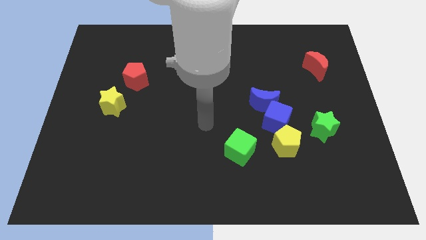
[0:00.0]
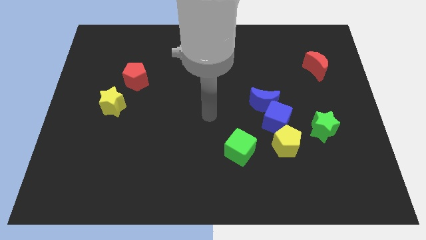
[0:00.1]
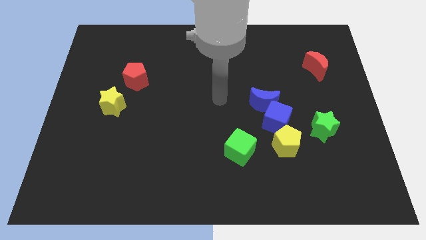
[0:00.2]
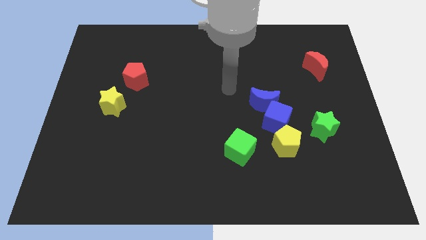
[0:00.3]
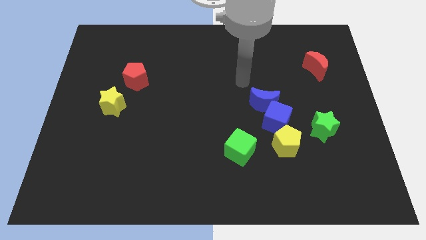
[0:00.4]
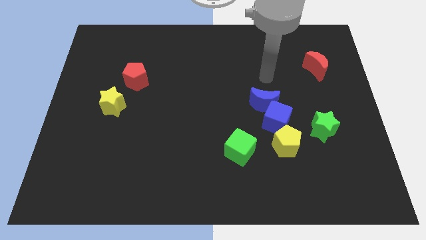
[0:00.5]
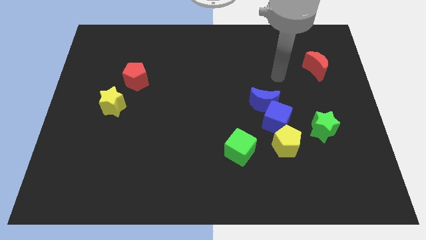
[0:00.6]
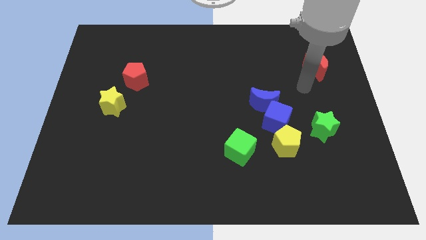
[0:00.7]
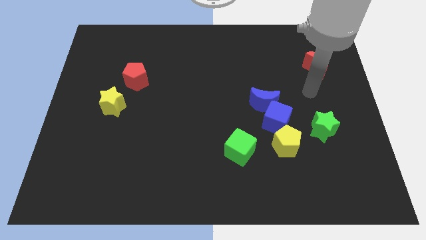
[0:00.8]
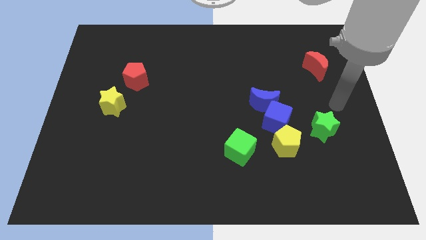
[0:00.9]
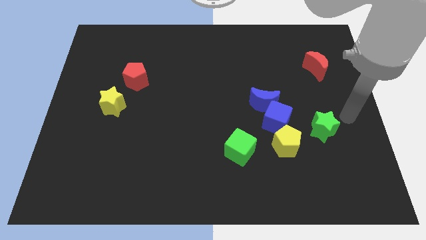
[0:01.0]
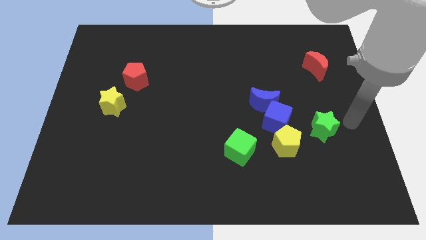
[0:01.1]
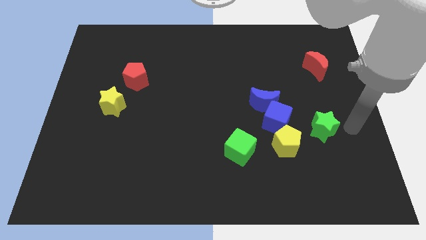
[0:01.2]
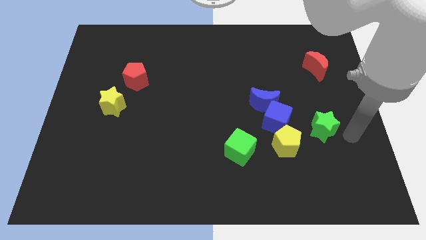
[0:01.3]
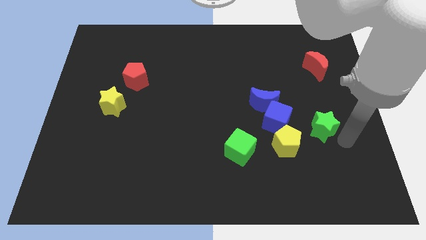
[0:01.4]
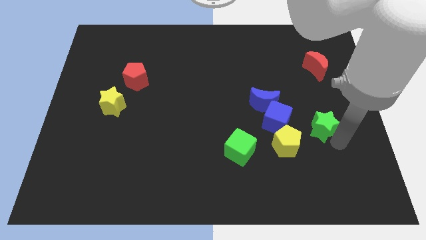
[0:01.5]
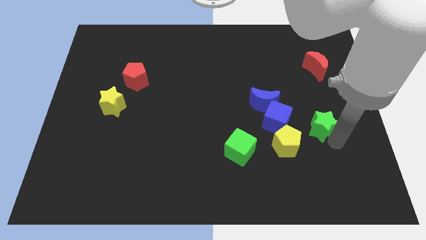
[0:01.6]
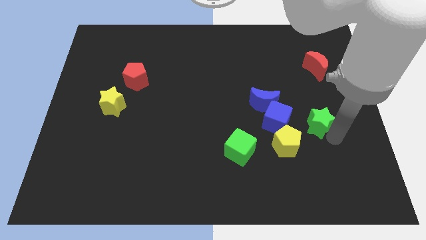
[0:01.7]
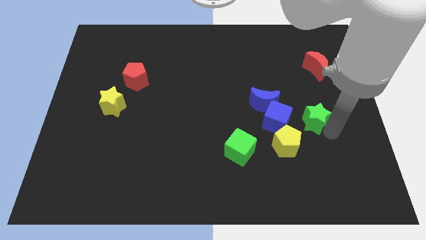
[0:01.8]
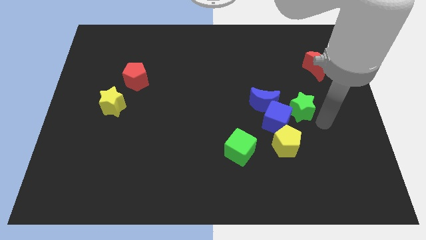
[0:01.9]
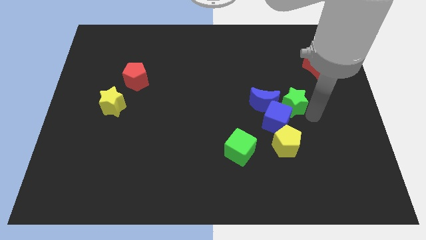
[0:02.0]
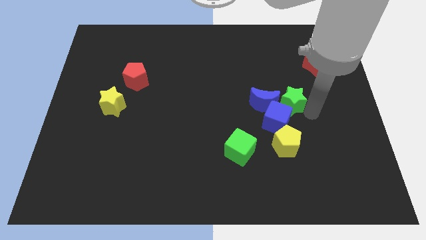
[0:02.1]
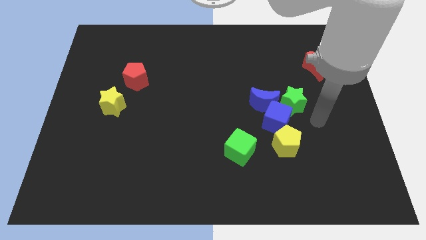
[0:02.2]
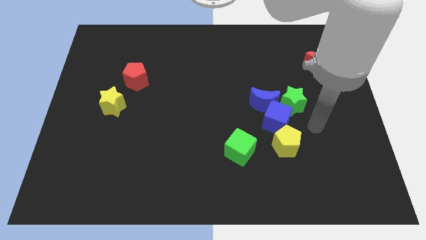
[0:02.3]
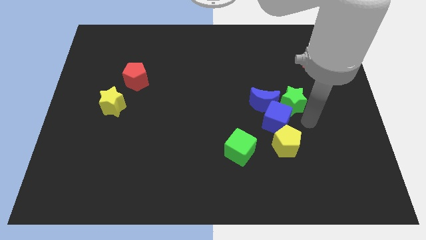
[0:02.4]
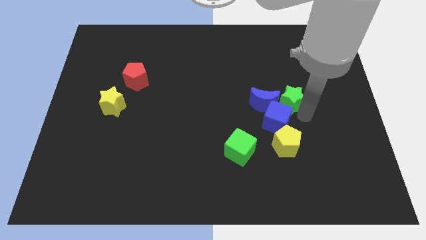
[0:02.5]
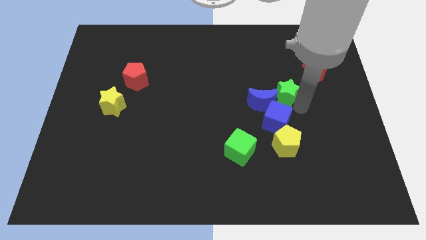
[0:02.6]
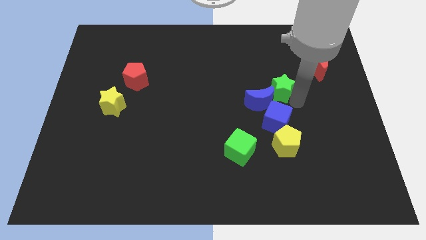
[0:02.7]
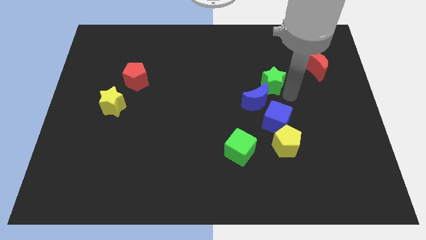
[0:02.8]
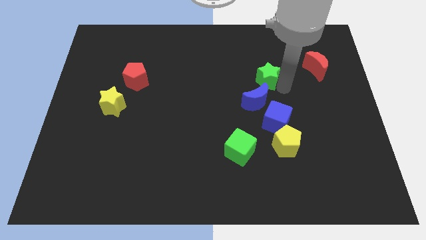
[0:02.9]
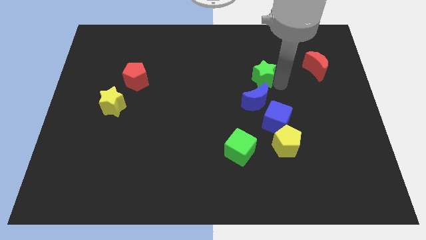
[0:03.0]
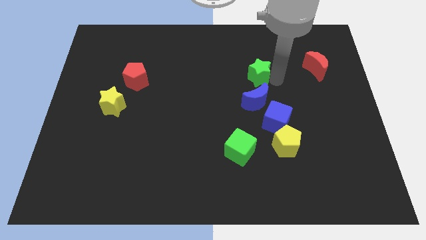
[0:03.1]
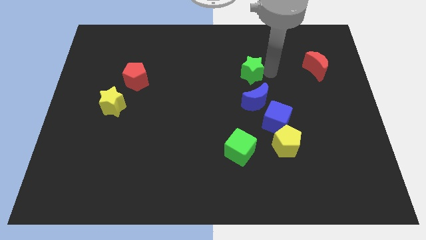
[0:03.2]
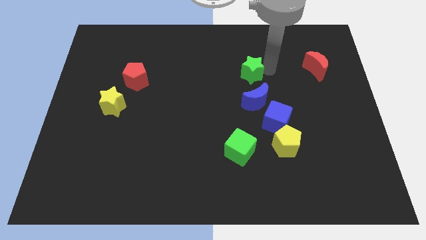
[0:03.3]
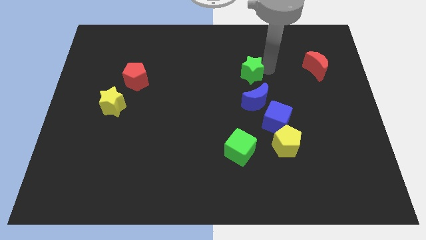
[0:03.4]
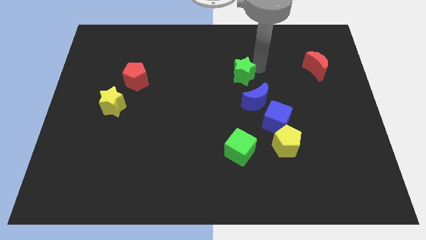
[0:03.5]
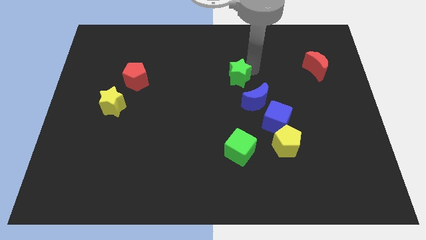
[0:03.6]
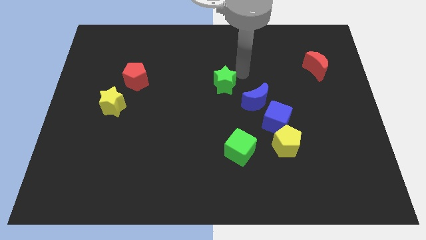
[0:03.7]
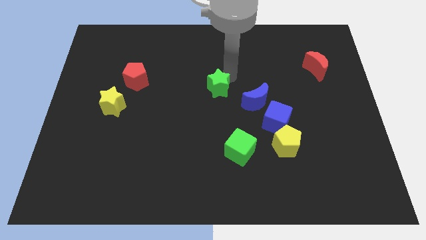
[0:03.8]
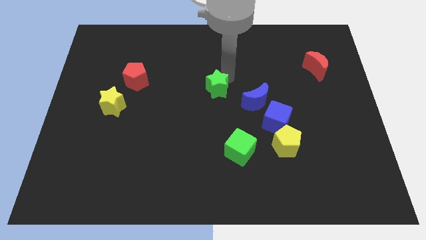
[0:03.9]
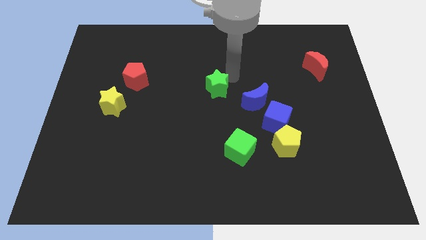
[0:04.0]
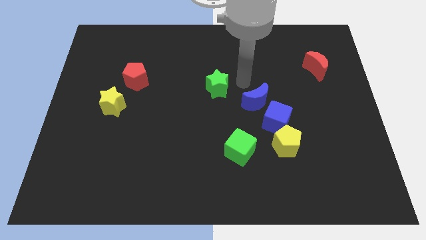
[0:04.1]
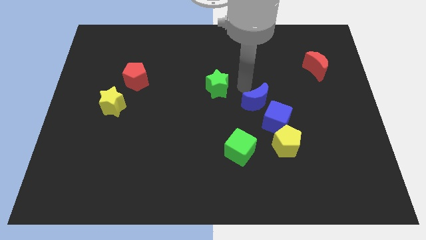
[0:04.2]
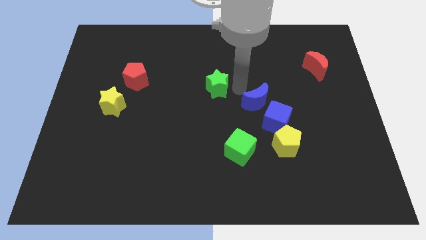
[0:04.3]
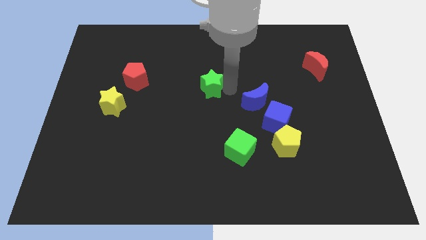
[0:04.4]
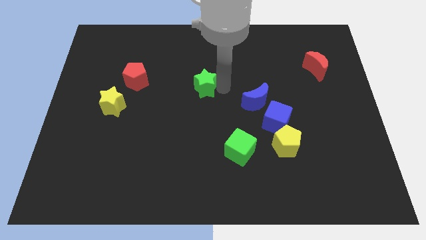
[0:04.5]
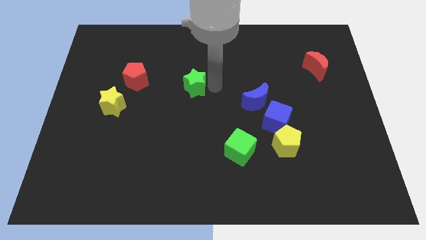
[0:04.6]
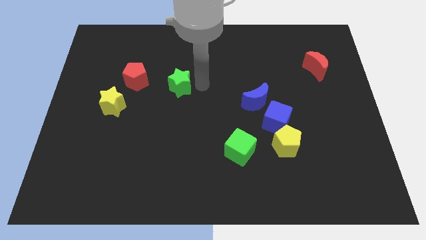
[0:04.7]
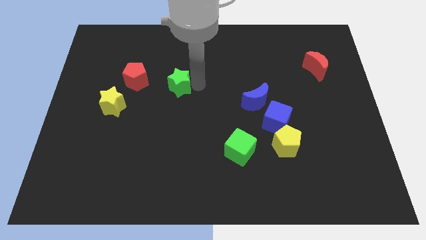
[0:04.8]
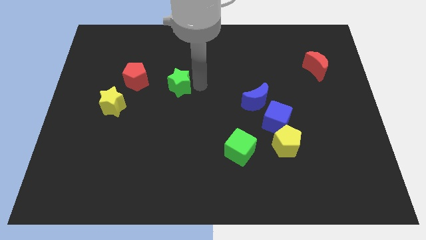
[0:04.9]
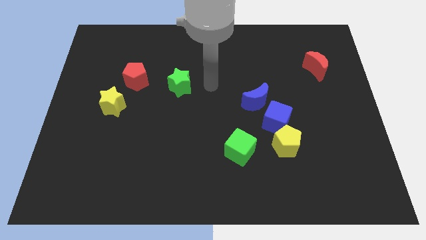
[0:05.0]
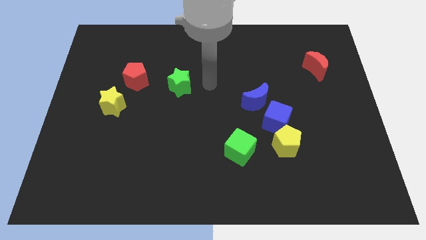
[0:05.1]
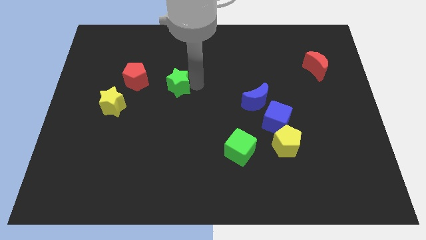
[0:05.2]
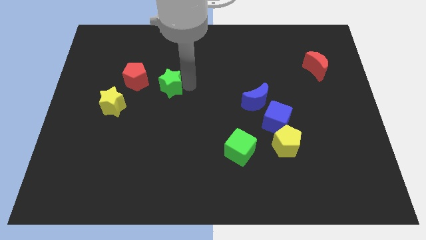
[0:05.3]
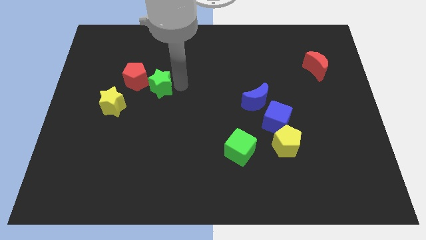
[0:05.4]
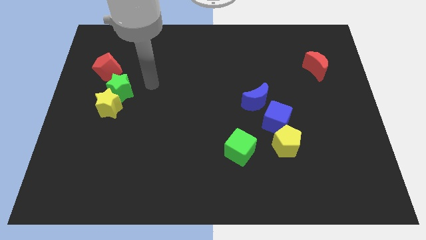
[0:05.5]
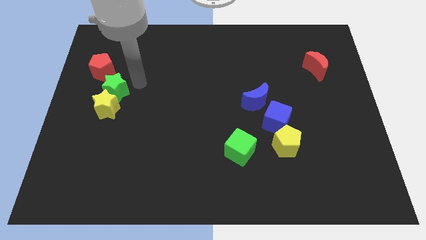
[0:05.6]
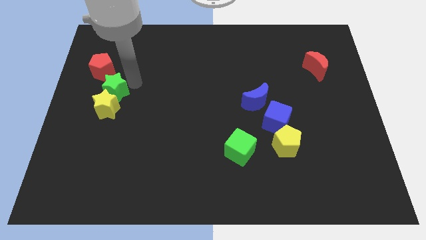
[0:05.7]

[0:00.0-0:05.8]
put the green star towards the yellow star

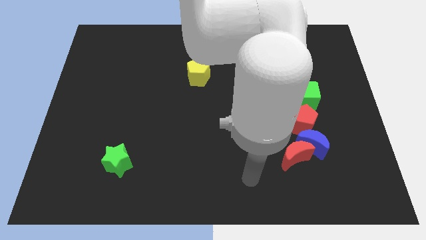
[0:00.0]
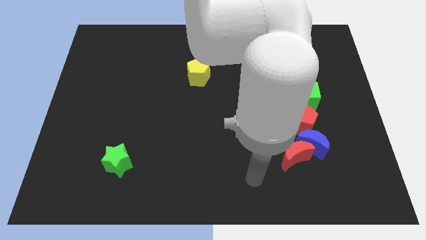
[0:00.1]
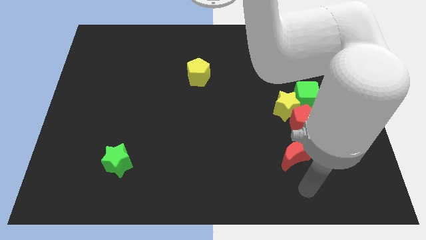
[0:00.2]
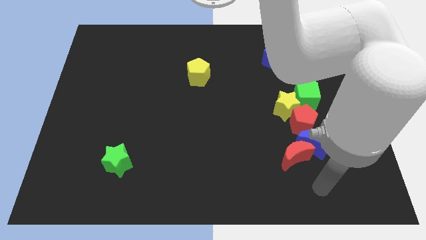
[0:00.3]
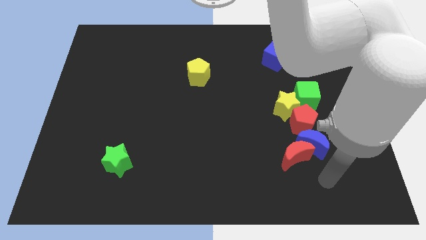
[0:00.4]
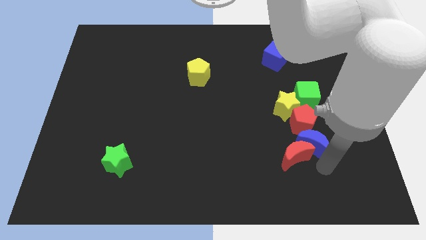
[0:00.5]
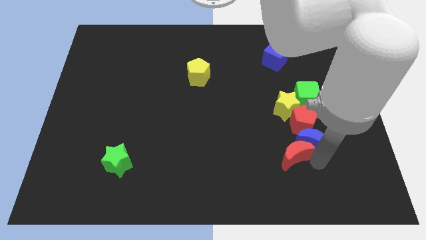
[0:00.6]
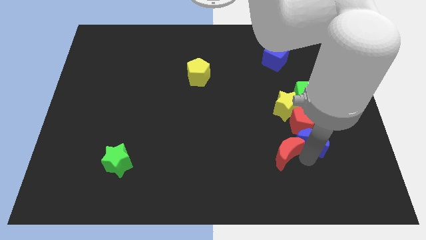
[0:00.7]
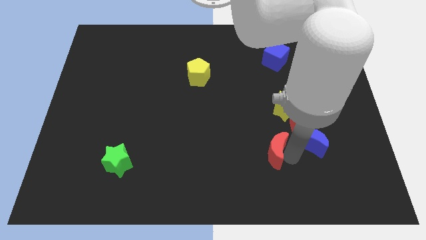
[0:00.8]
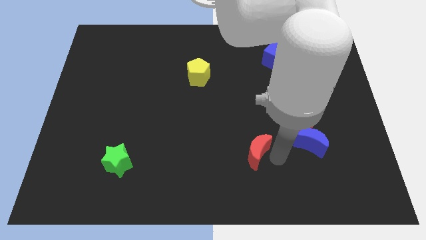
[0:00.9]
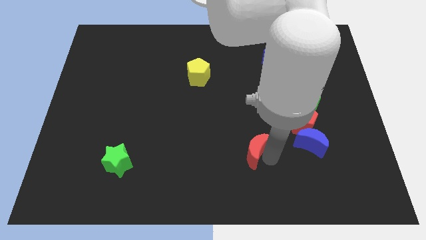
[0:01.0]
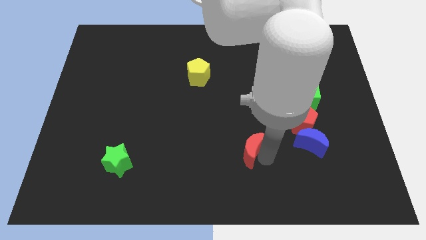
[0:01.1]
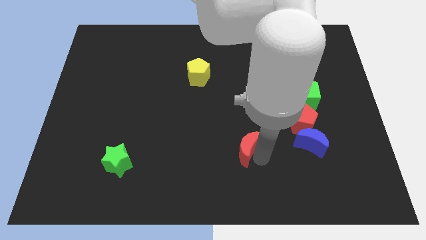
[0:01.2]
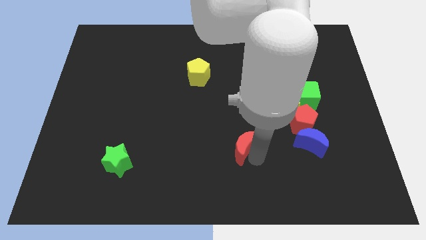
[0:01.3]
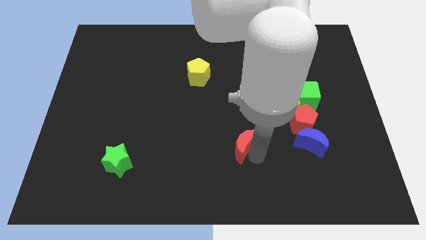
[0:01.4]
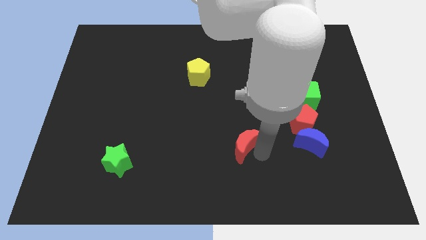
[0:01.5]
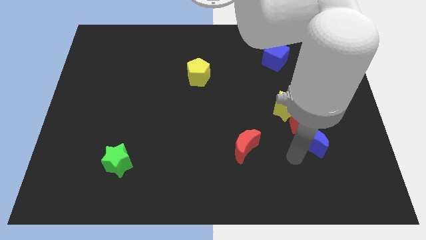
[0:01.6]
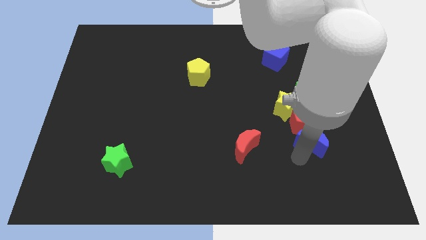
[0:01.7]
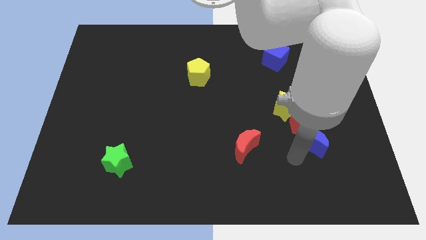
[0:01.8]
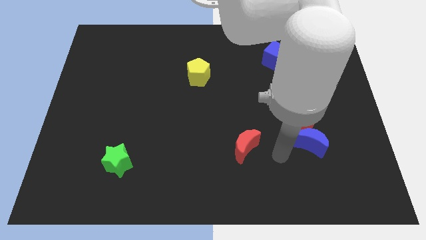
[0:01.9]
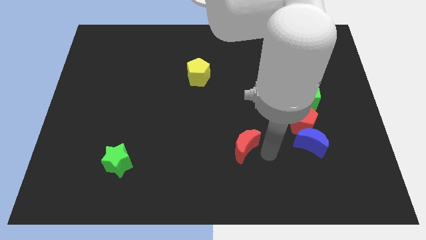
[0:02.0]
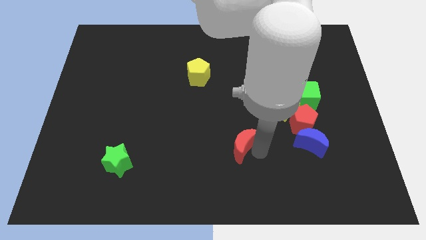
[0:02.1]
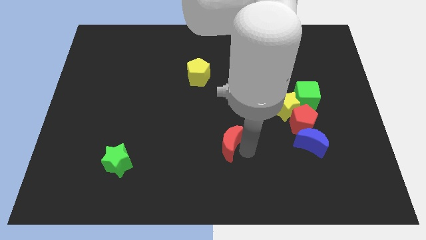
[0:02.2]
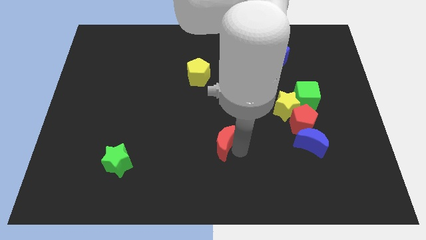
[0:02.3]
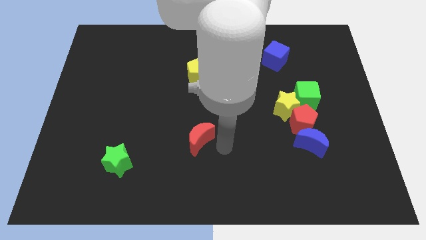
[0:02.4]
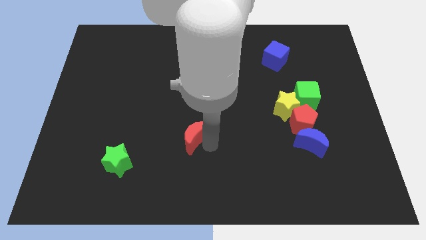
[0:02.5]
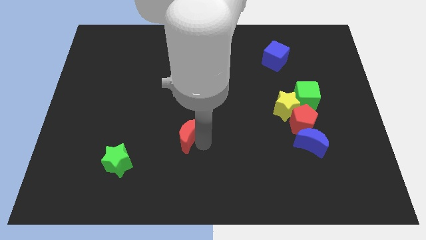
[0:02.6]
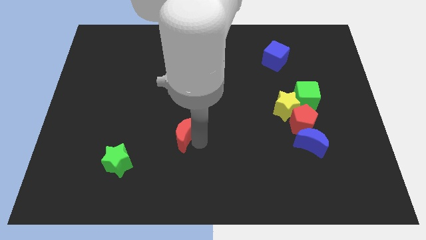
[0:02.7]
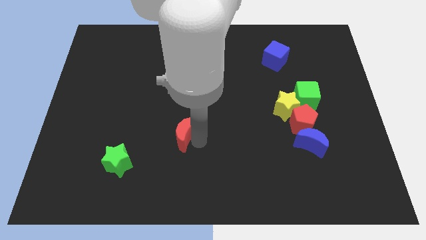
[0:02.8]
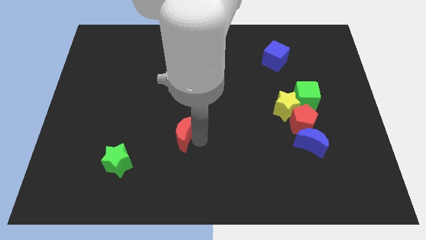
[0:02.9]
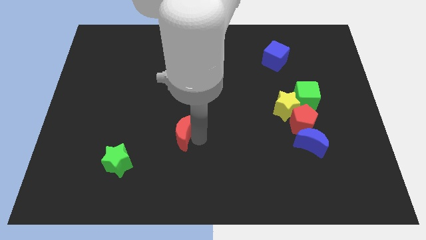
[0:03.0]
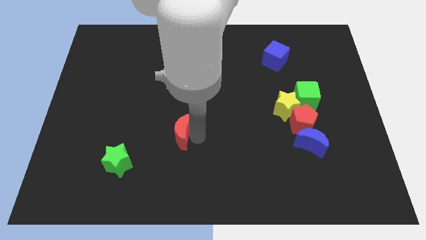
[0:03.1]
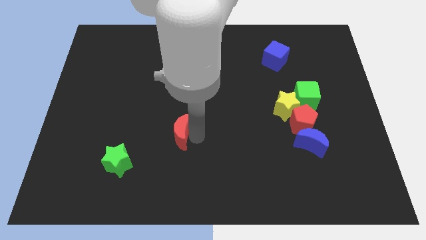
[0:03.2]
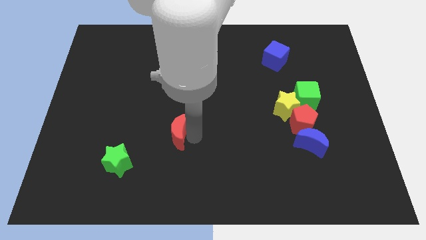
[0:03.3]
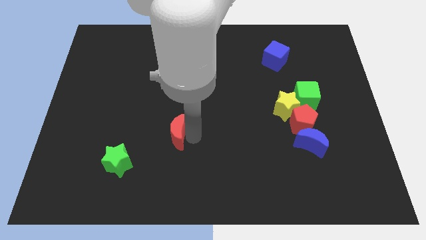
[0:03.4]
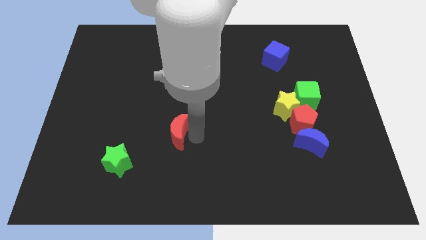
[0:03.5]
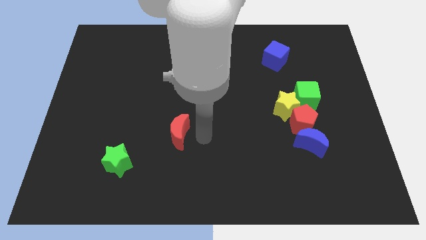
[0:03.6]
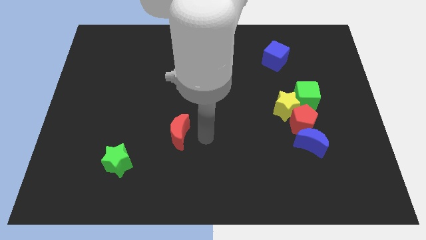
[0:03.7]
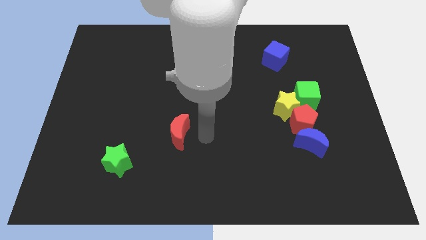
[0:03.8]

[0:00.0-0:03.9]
slide the red moon next to the green star
